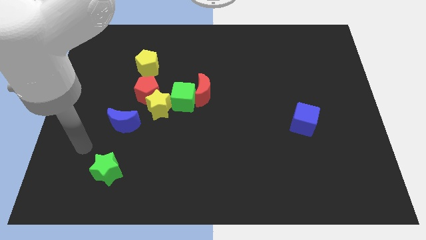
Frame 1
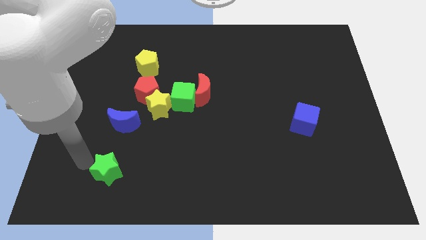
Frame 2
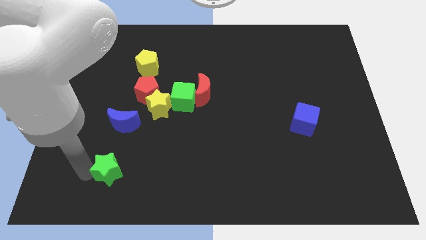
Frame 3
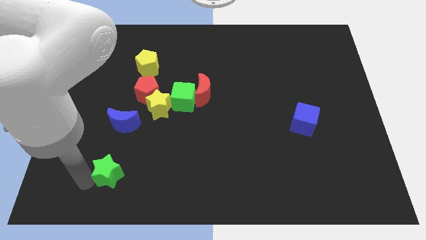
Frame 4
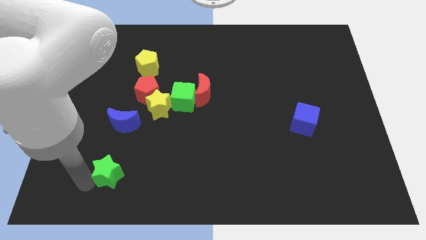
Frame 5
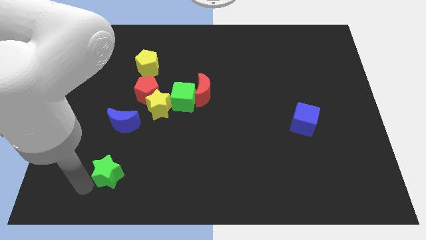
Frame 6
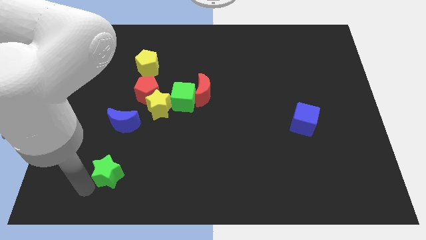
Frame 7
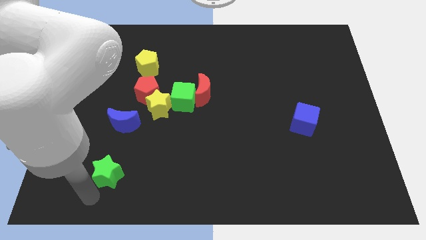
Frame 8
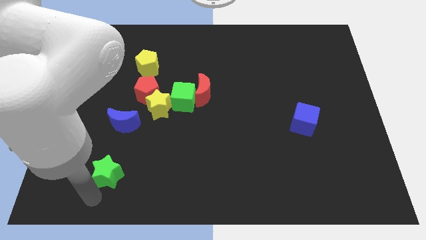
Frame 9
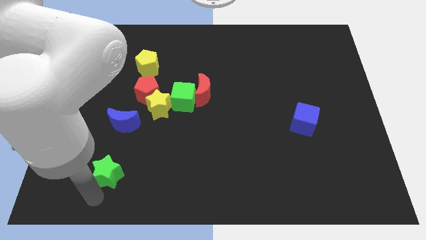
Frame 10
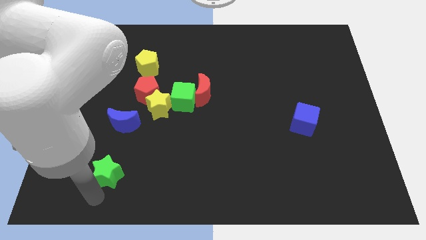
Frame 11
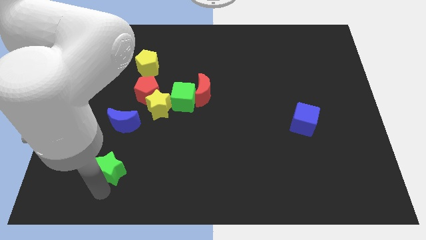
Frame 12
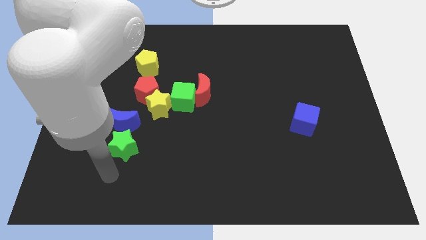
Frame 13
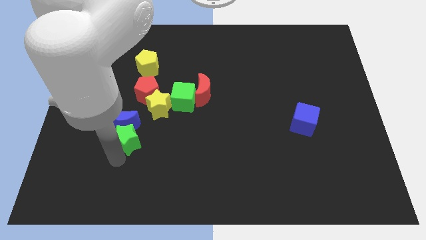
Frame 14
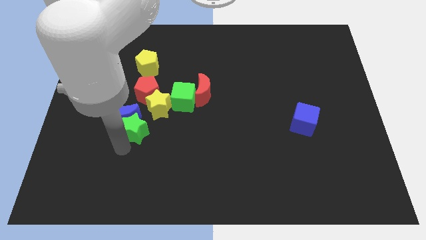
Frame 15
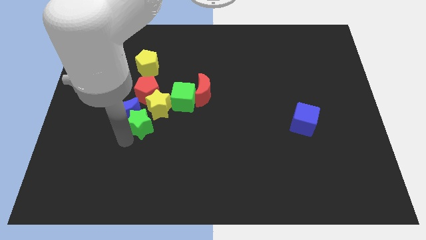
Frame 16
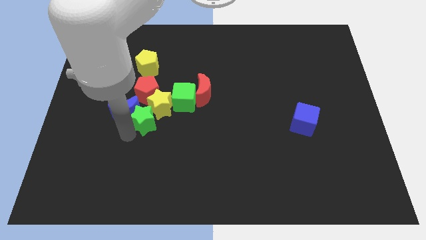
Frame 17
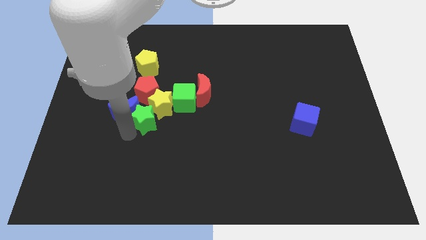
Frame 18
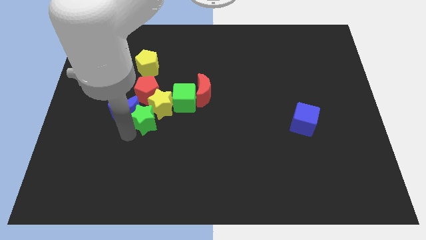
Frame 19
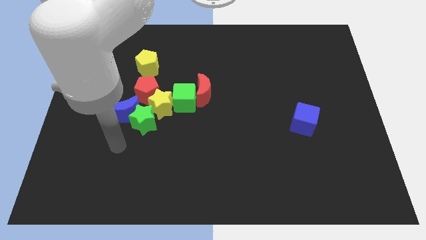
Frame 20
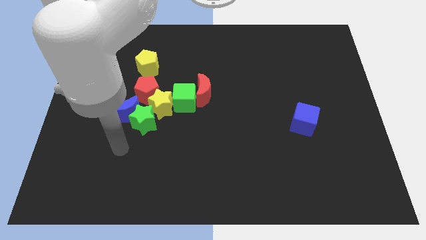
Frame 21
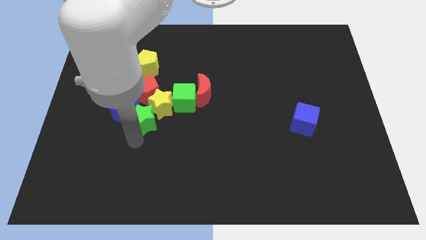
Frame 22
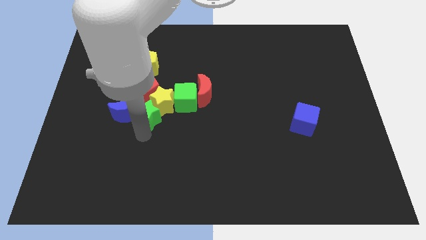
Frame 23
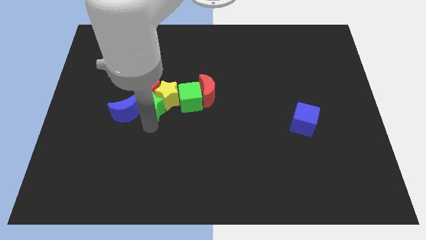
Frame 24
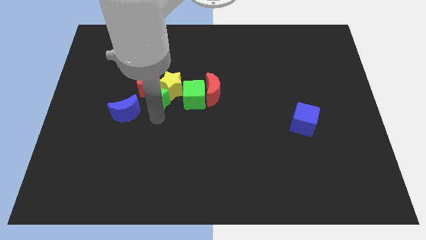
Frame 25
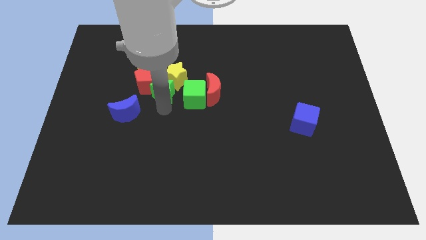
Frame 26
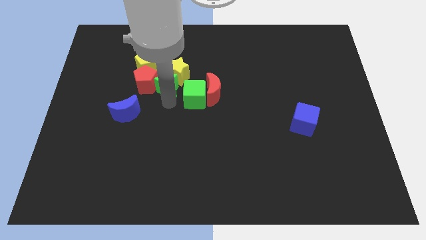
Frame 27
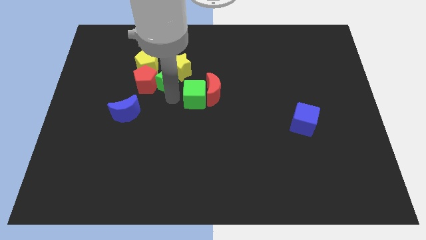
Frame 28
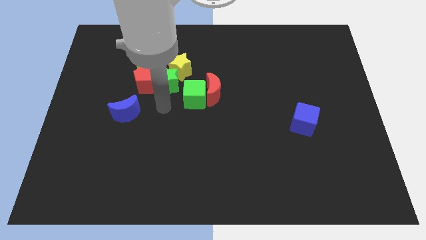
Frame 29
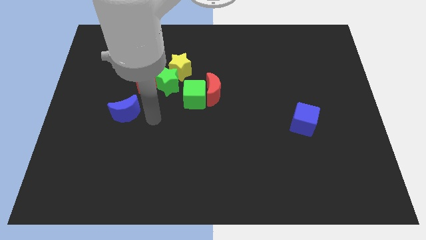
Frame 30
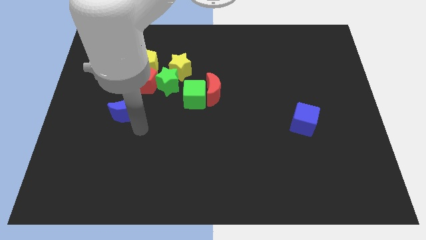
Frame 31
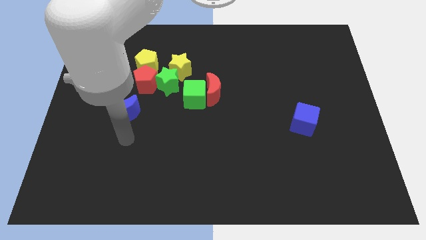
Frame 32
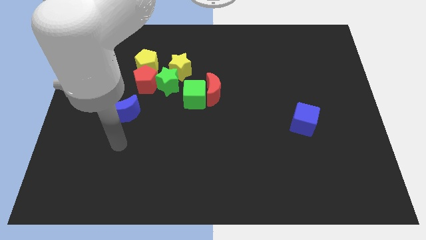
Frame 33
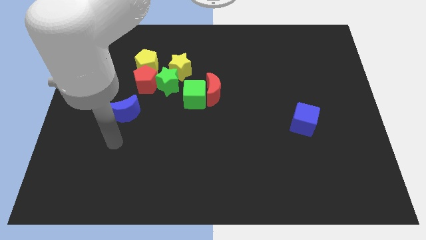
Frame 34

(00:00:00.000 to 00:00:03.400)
push the green star along with yellow star towards the top center of the board

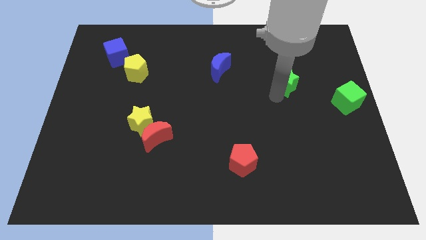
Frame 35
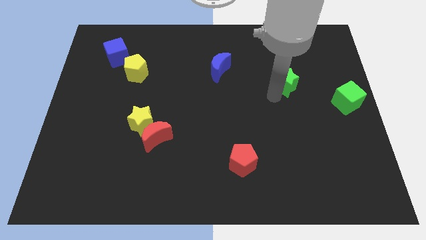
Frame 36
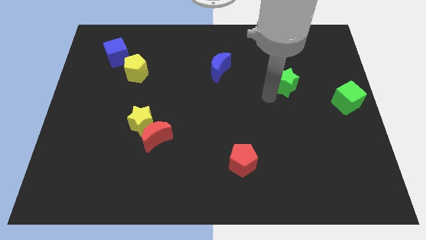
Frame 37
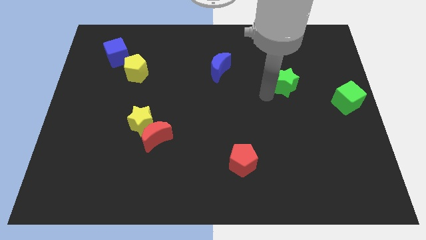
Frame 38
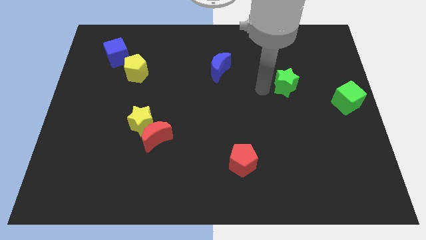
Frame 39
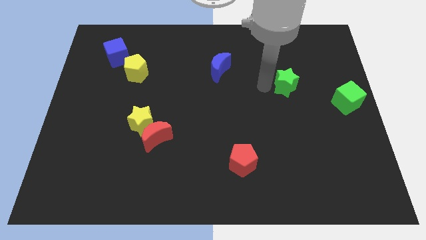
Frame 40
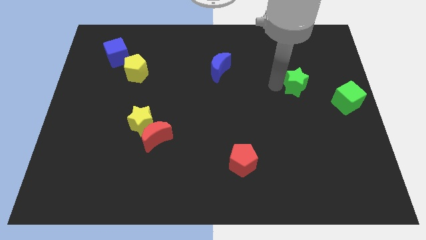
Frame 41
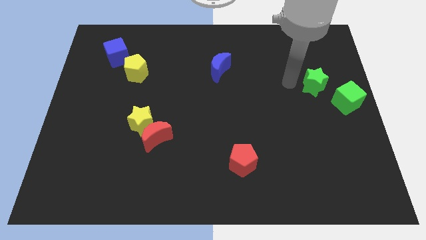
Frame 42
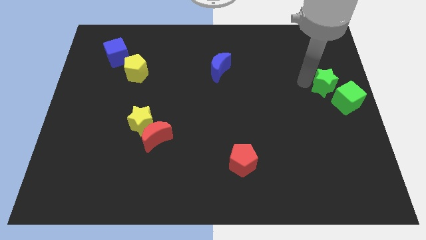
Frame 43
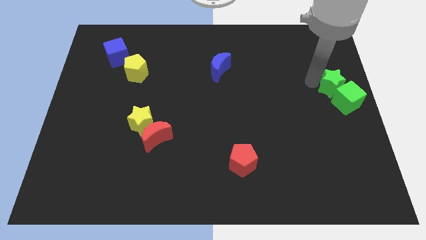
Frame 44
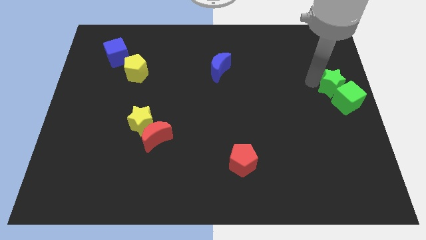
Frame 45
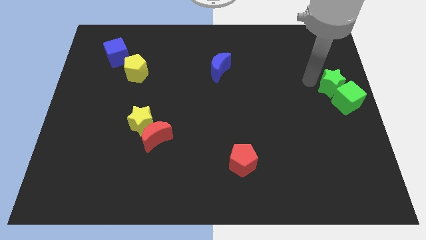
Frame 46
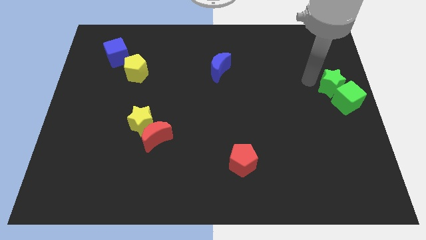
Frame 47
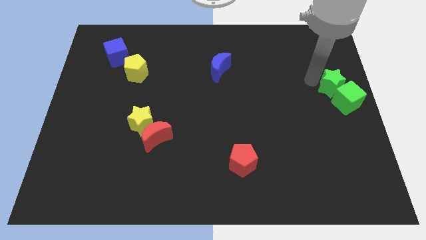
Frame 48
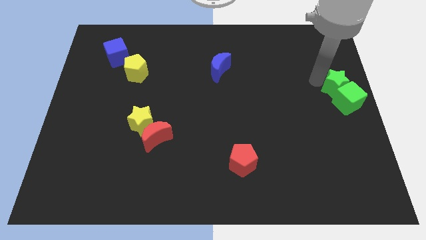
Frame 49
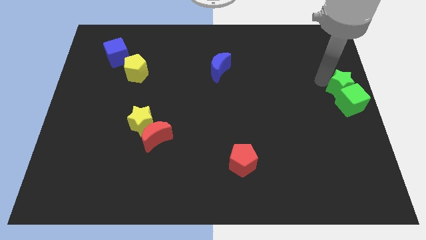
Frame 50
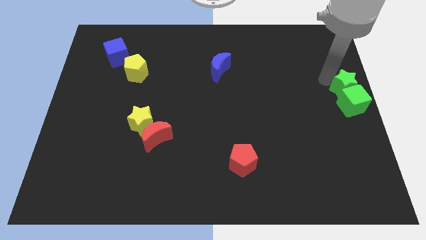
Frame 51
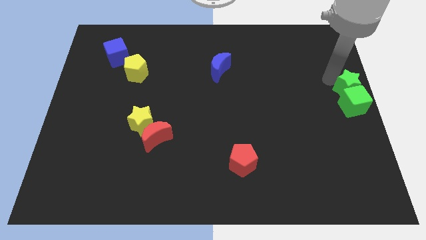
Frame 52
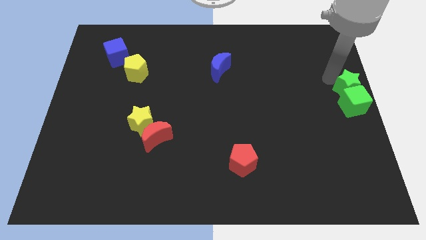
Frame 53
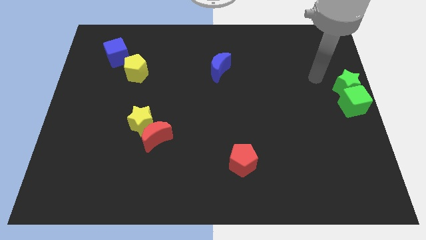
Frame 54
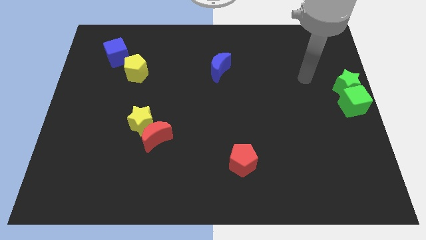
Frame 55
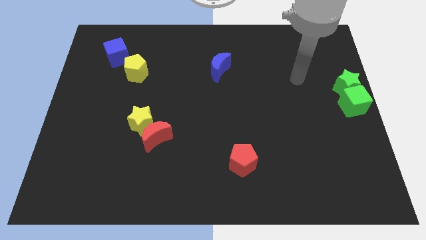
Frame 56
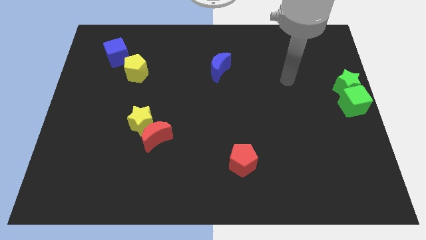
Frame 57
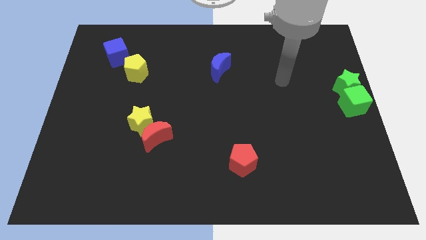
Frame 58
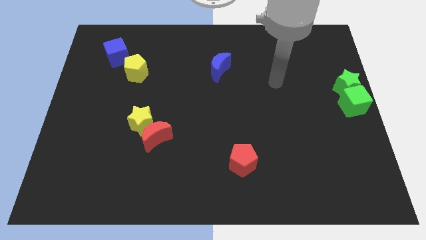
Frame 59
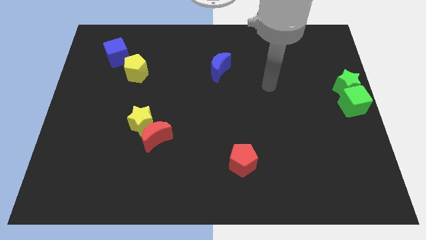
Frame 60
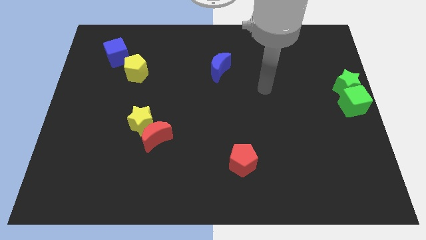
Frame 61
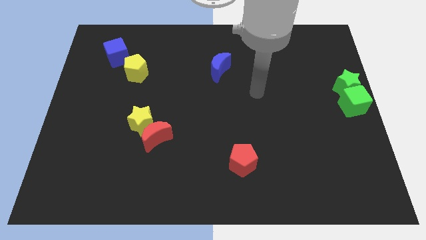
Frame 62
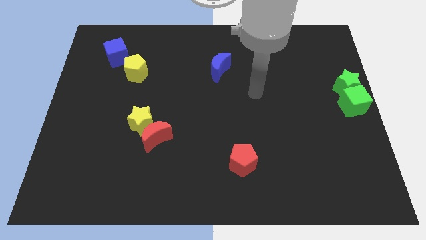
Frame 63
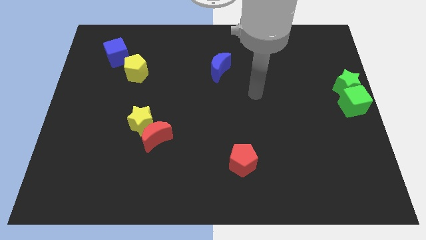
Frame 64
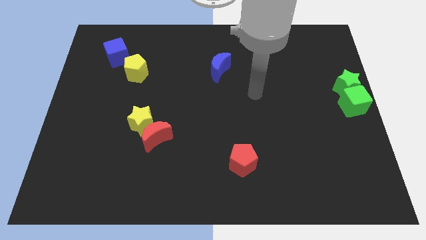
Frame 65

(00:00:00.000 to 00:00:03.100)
move the green star to the top of the green cube

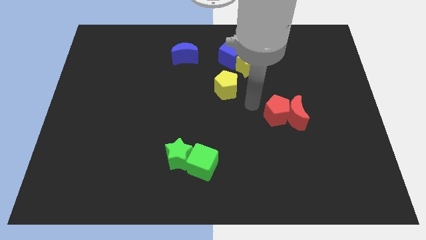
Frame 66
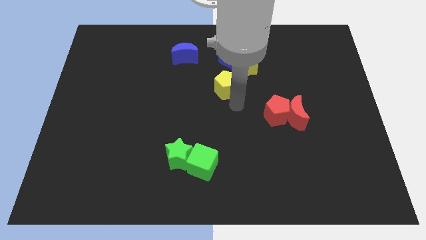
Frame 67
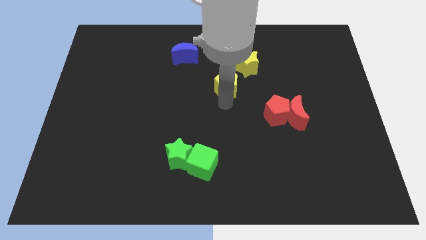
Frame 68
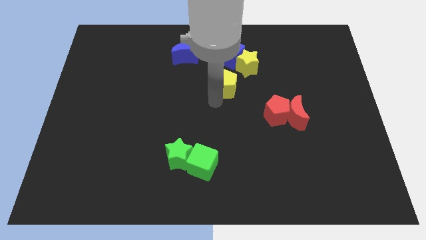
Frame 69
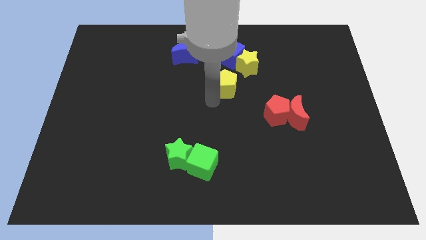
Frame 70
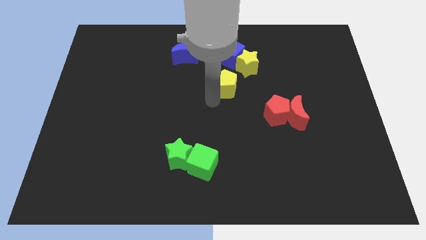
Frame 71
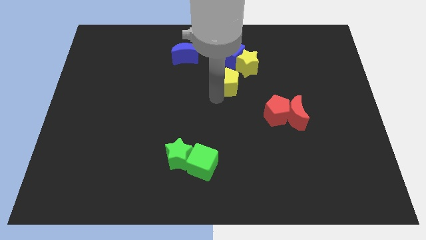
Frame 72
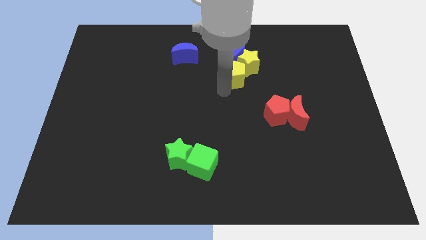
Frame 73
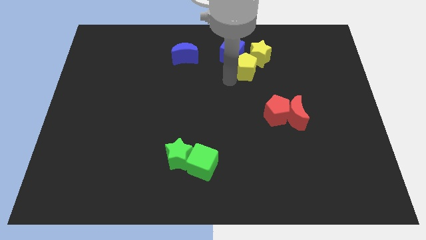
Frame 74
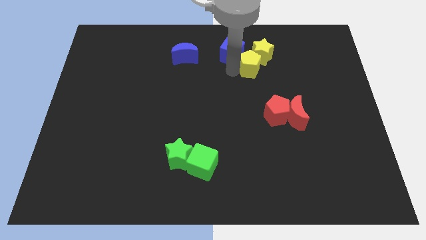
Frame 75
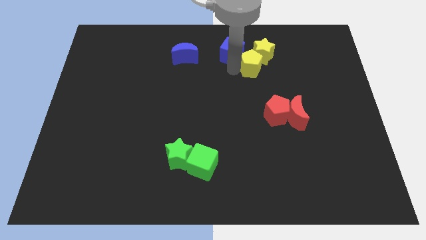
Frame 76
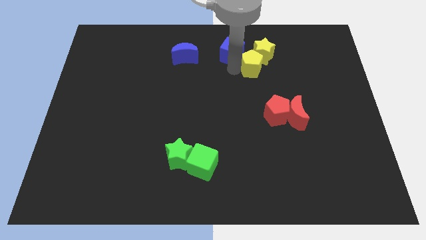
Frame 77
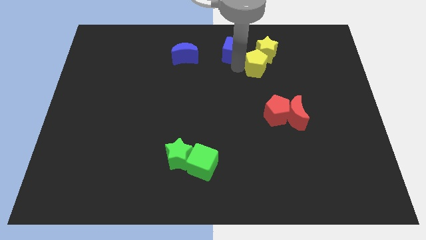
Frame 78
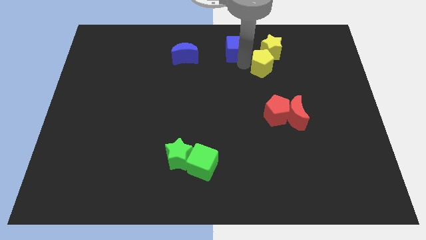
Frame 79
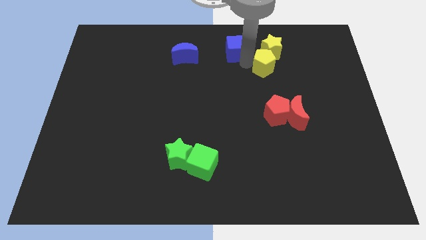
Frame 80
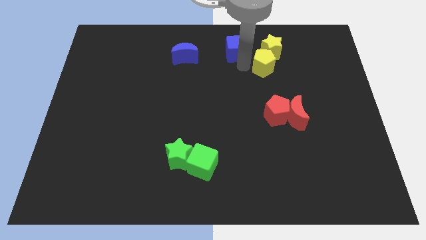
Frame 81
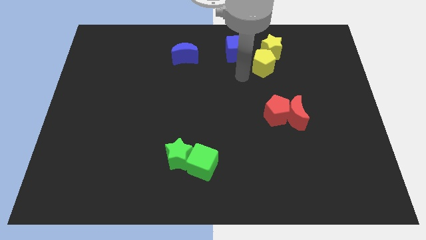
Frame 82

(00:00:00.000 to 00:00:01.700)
push the yellow pentagon into the yellow star

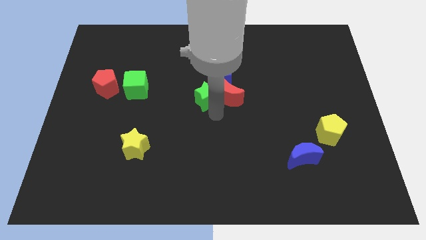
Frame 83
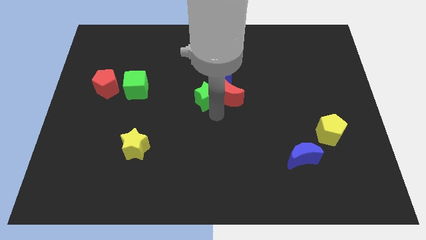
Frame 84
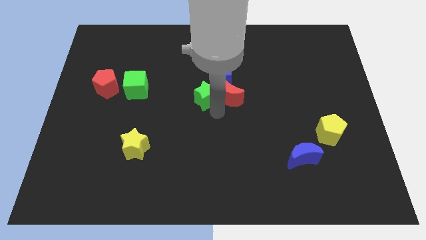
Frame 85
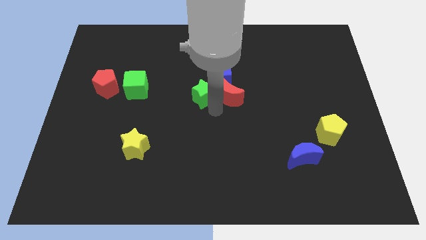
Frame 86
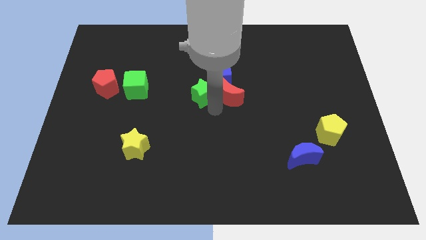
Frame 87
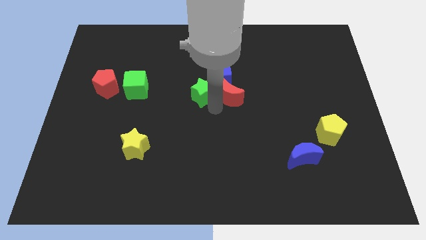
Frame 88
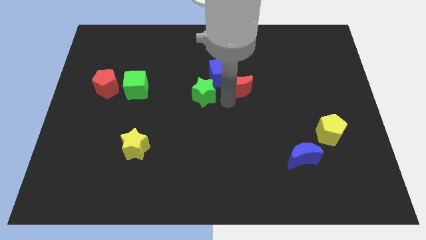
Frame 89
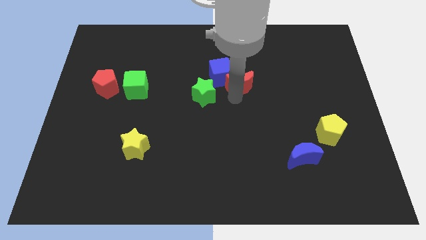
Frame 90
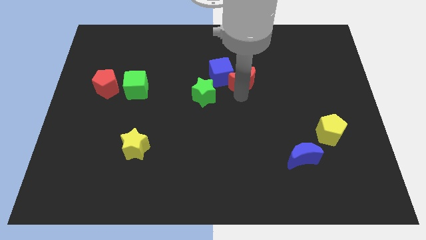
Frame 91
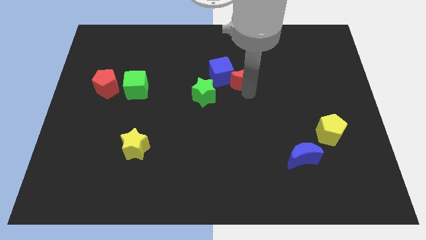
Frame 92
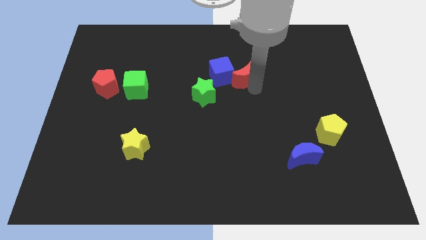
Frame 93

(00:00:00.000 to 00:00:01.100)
separate the green star and the red moon
